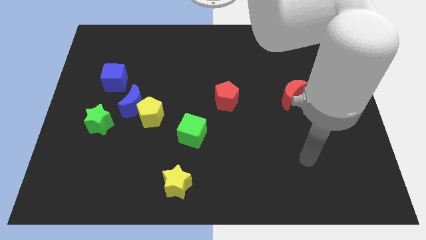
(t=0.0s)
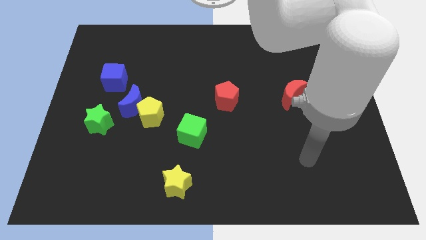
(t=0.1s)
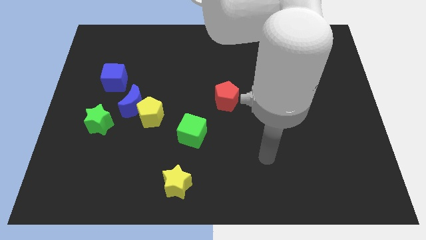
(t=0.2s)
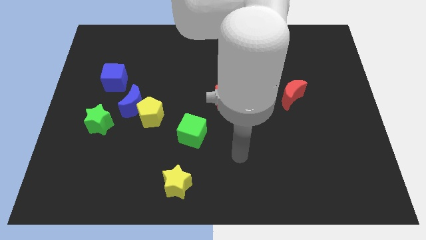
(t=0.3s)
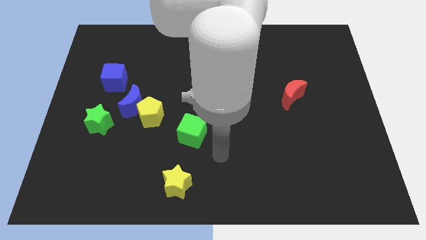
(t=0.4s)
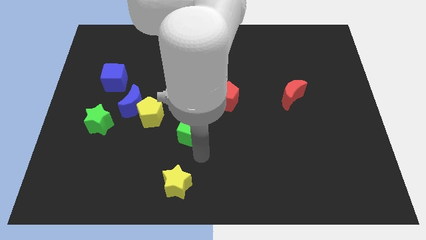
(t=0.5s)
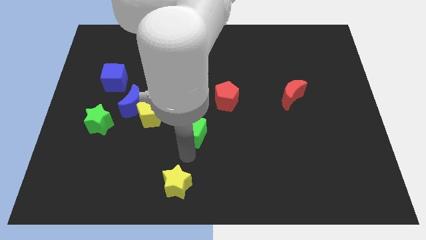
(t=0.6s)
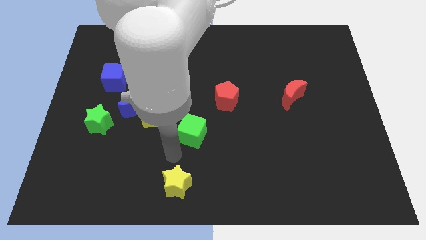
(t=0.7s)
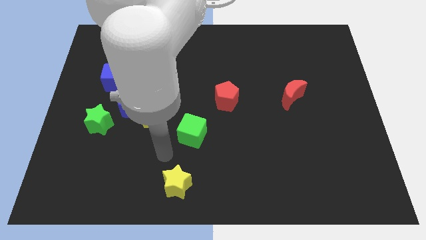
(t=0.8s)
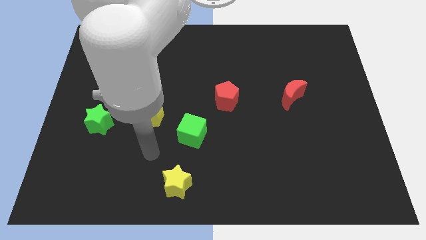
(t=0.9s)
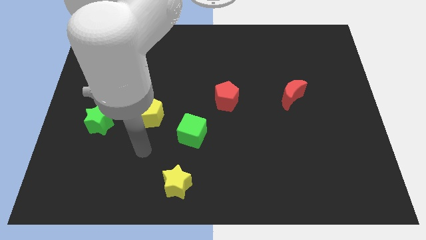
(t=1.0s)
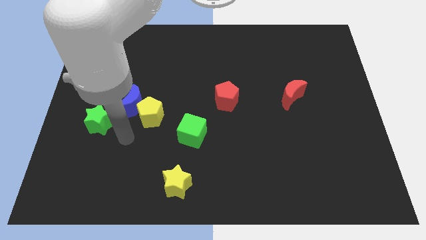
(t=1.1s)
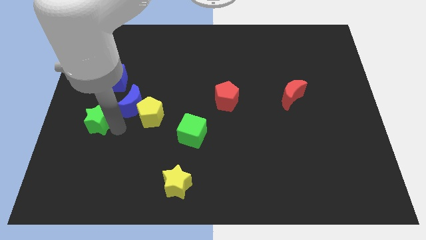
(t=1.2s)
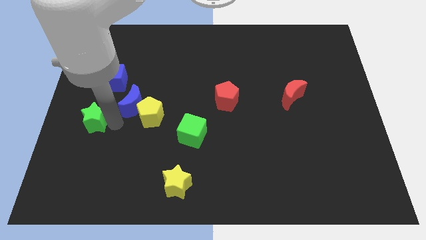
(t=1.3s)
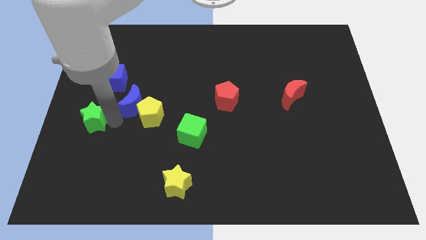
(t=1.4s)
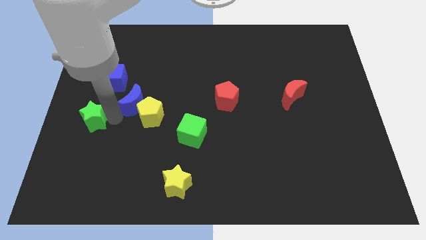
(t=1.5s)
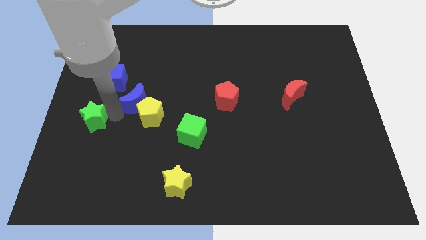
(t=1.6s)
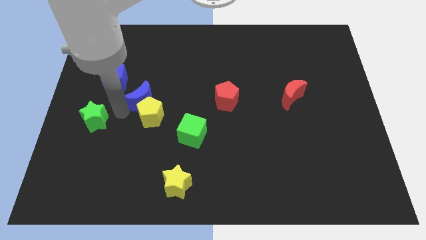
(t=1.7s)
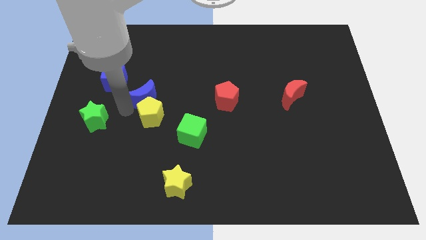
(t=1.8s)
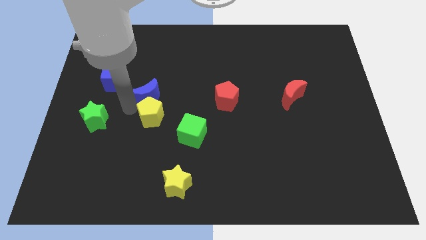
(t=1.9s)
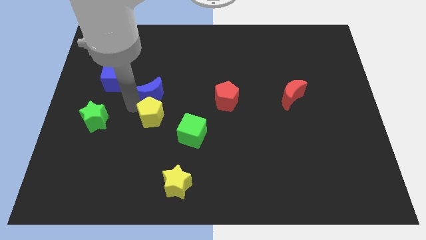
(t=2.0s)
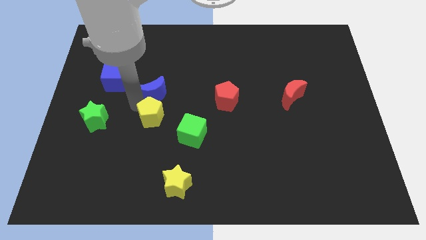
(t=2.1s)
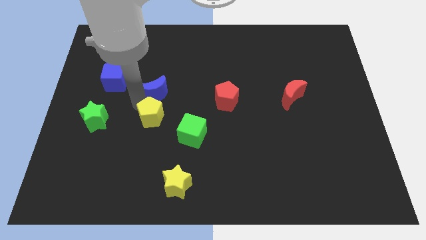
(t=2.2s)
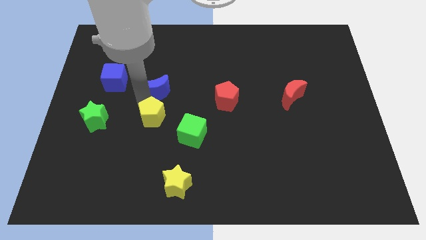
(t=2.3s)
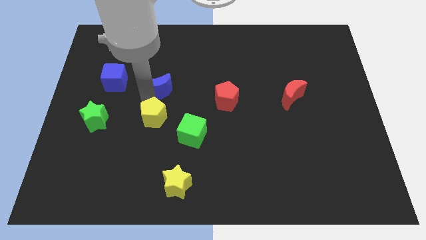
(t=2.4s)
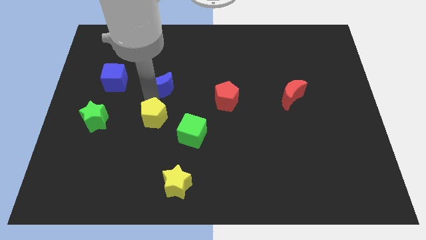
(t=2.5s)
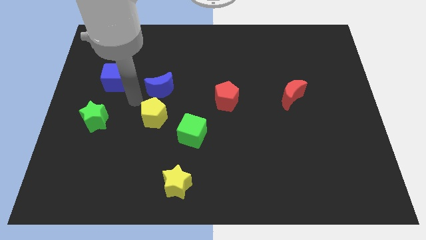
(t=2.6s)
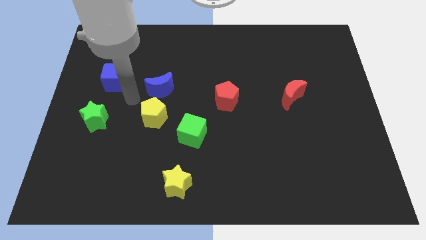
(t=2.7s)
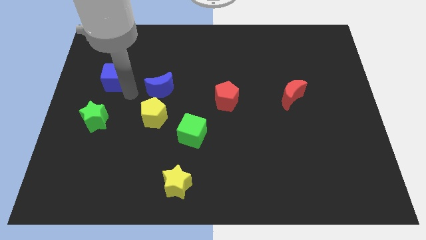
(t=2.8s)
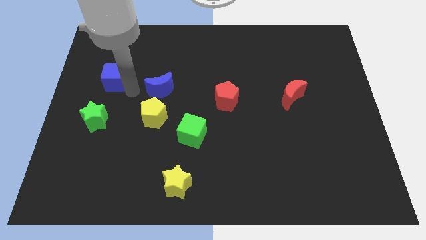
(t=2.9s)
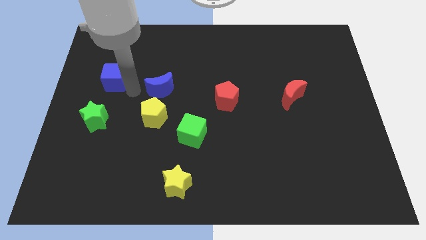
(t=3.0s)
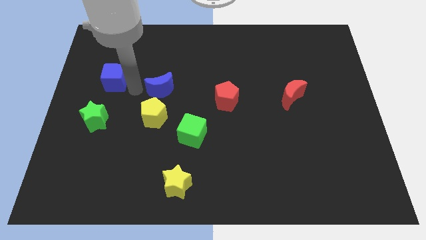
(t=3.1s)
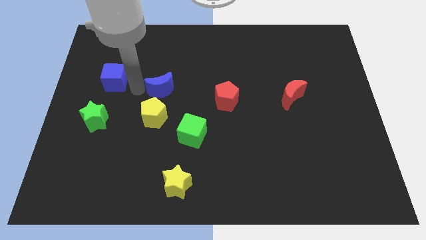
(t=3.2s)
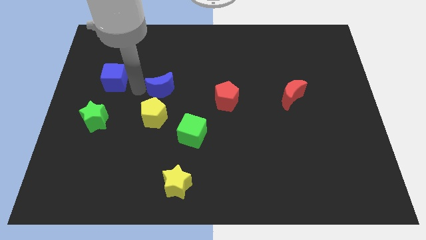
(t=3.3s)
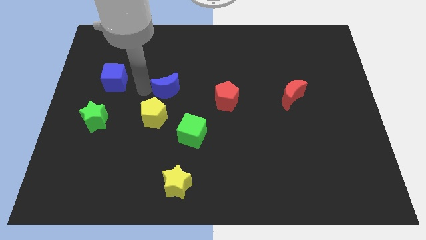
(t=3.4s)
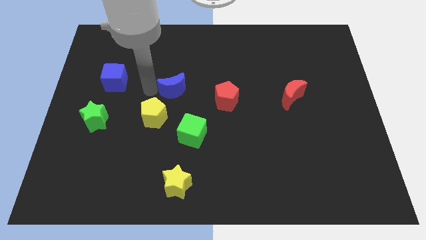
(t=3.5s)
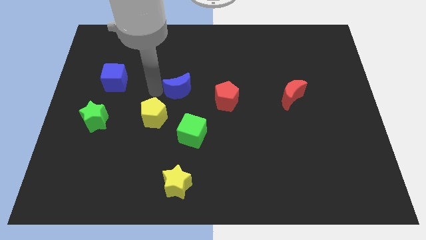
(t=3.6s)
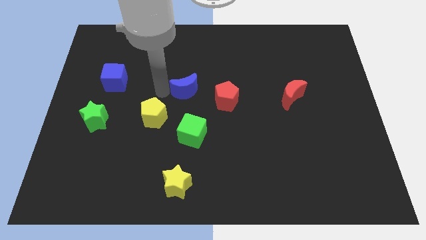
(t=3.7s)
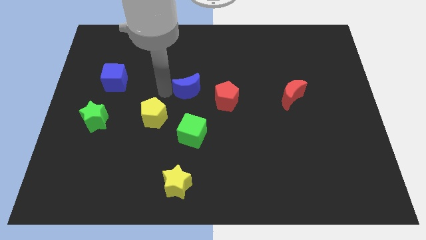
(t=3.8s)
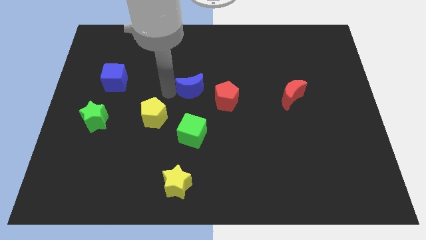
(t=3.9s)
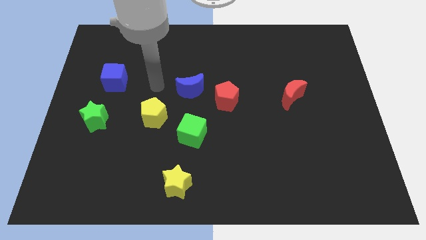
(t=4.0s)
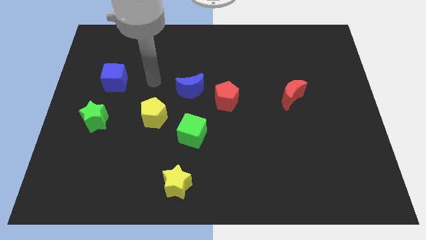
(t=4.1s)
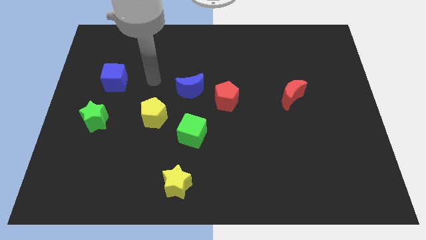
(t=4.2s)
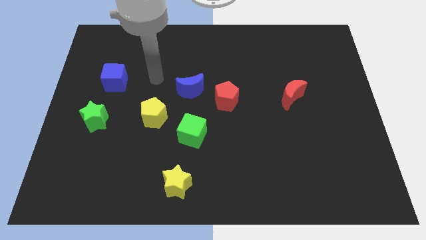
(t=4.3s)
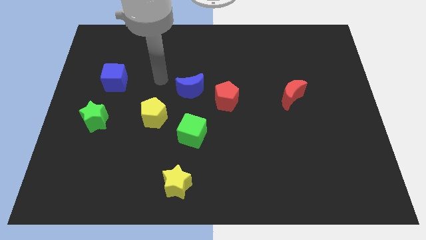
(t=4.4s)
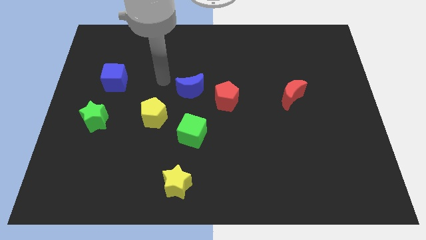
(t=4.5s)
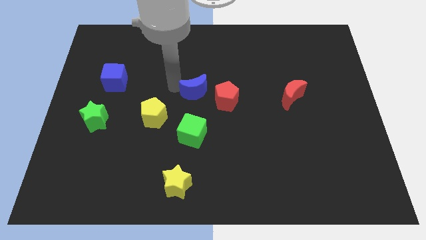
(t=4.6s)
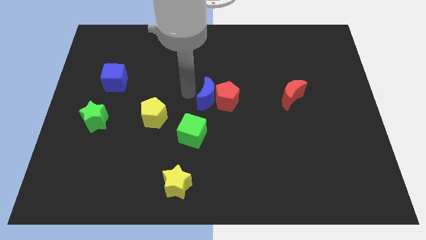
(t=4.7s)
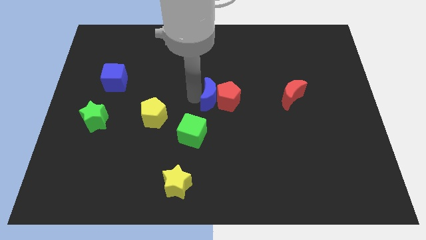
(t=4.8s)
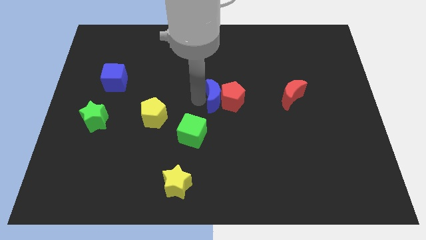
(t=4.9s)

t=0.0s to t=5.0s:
move the blue moon towards the red pentagon

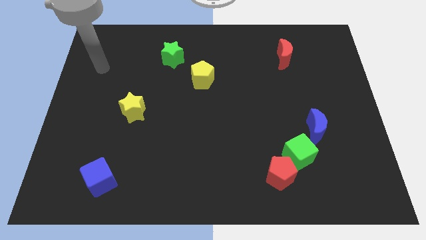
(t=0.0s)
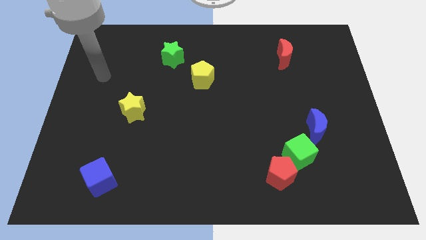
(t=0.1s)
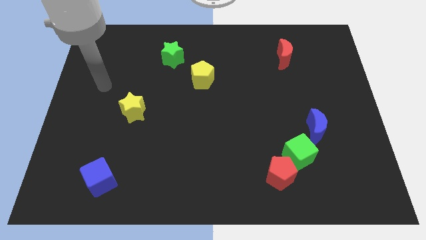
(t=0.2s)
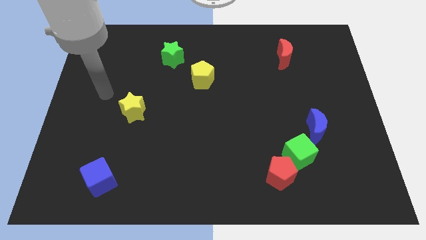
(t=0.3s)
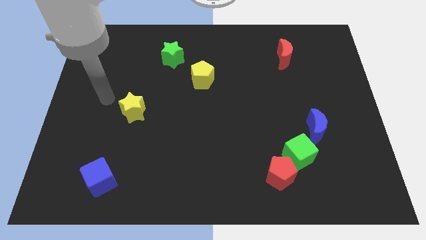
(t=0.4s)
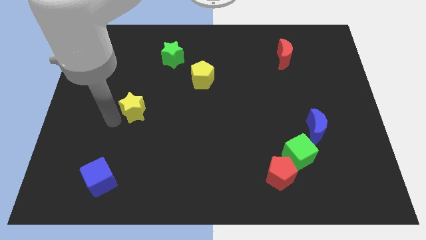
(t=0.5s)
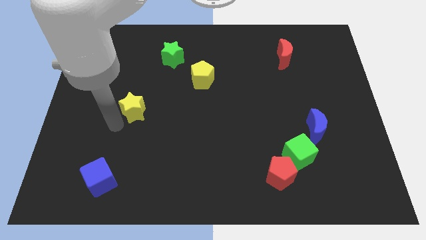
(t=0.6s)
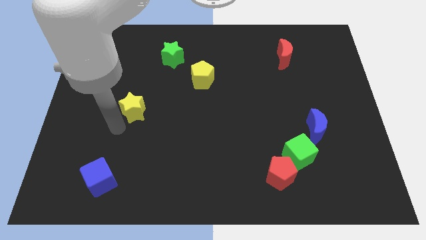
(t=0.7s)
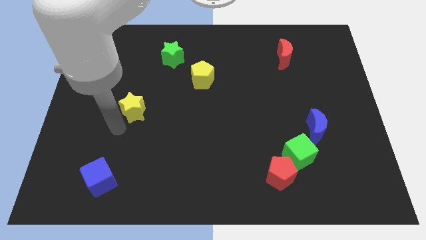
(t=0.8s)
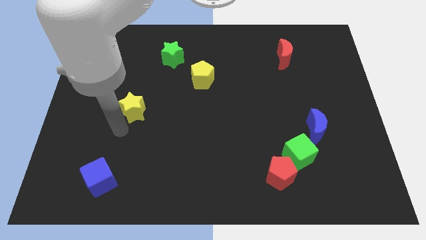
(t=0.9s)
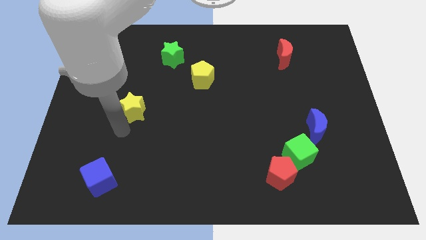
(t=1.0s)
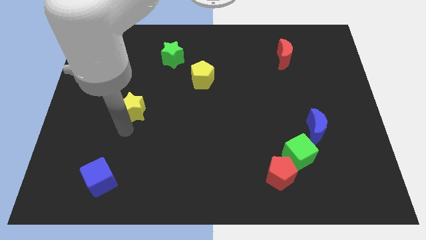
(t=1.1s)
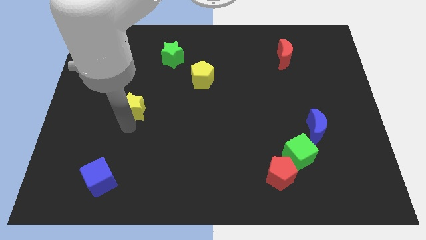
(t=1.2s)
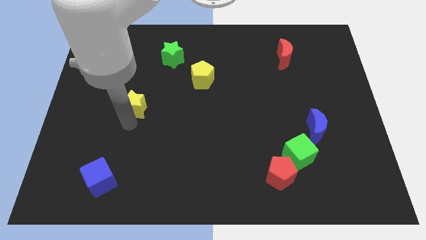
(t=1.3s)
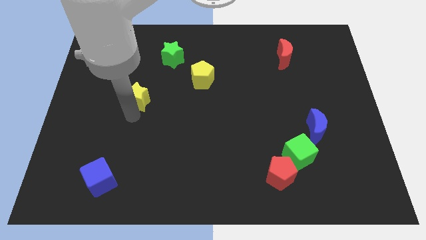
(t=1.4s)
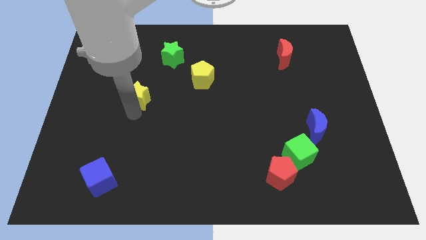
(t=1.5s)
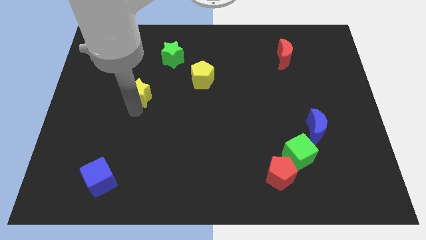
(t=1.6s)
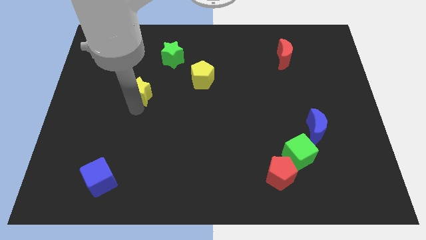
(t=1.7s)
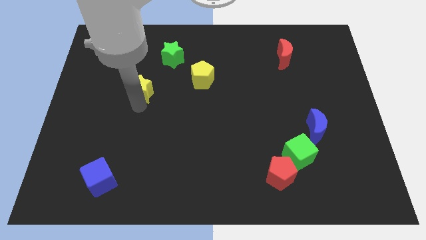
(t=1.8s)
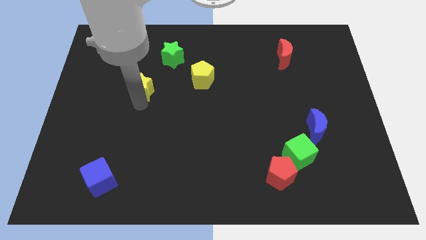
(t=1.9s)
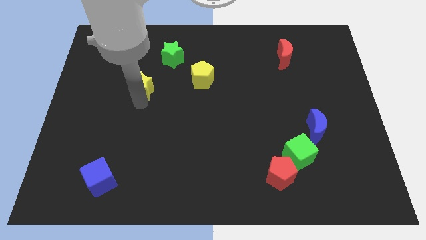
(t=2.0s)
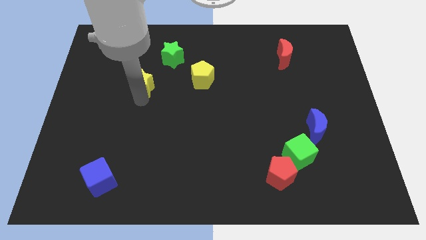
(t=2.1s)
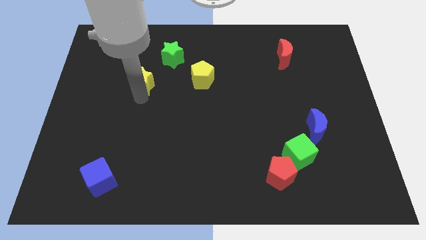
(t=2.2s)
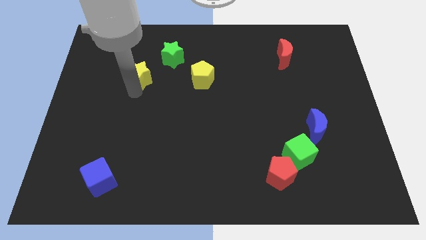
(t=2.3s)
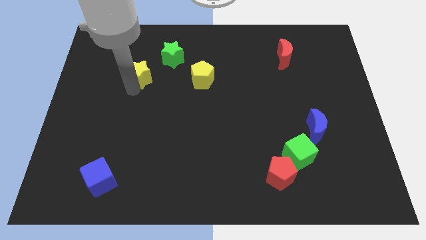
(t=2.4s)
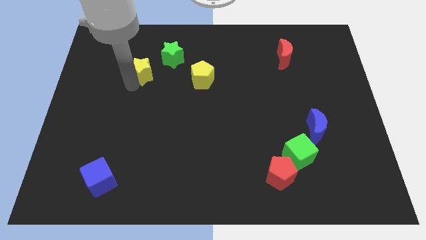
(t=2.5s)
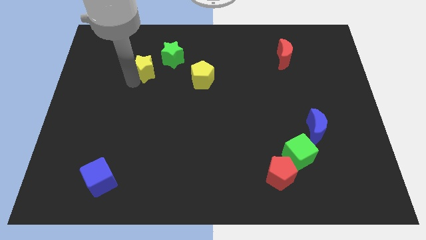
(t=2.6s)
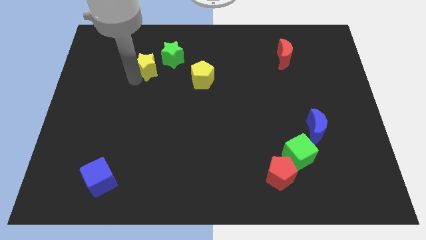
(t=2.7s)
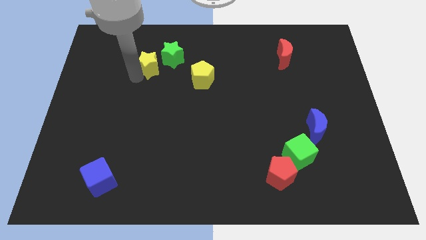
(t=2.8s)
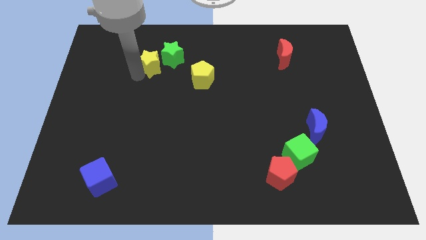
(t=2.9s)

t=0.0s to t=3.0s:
put the yellow star close to the green star

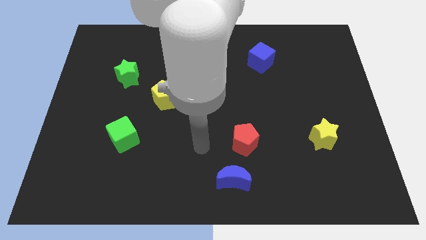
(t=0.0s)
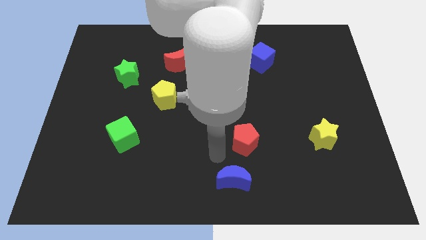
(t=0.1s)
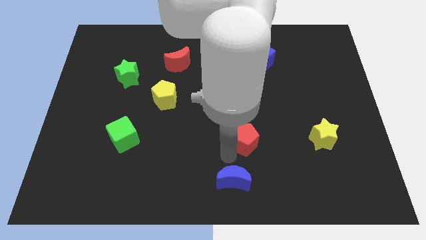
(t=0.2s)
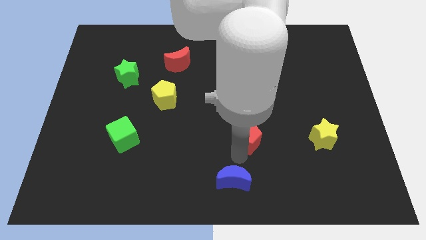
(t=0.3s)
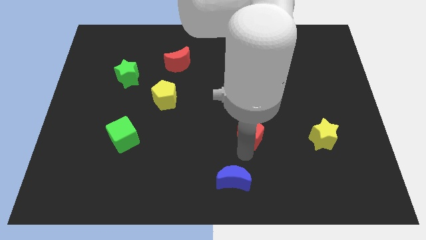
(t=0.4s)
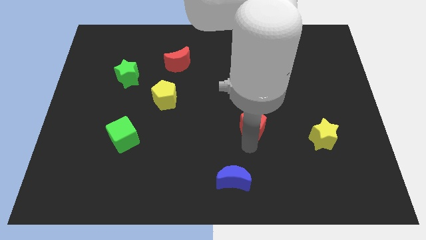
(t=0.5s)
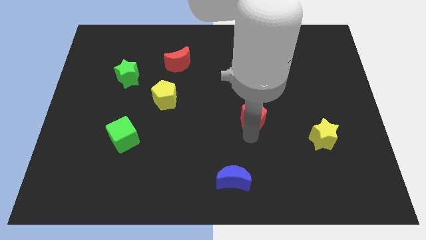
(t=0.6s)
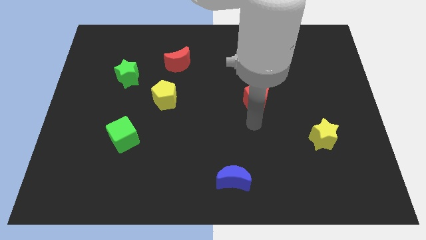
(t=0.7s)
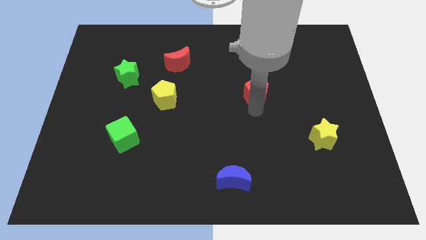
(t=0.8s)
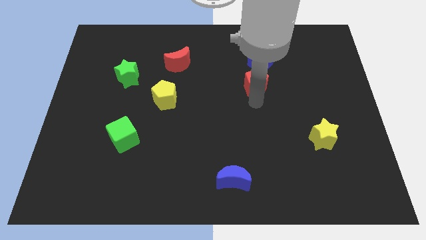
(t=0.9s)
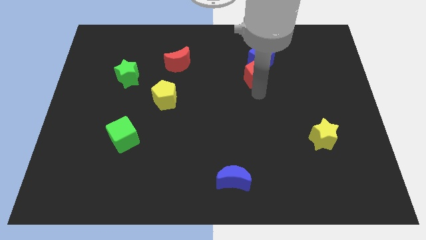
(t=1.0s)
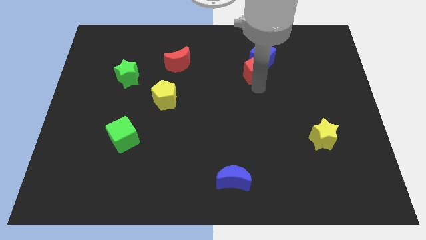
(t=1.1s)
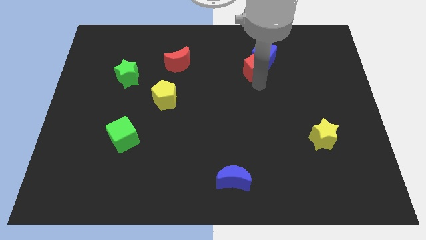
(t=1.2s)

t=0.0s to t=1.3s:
slide the red pentagon next to the blue cube
